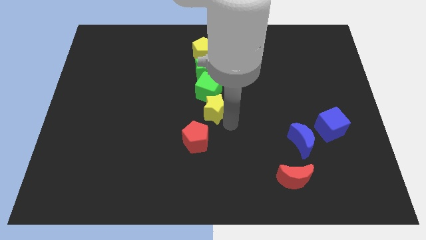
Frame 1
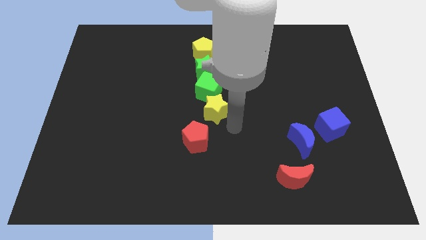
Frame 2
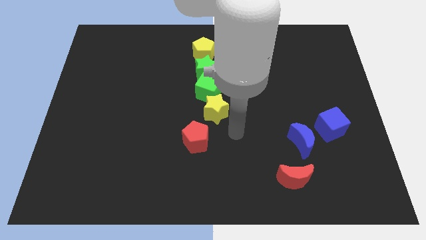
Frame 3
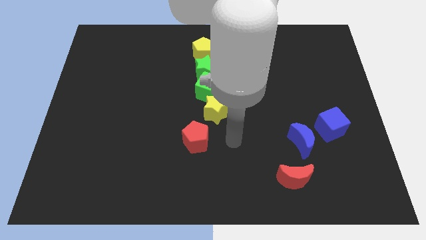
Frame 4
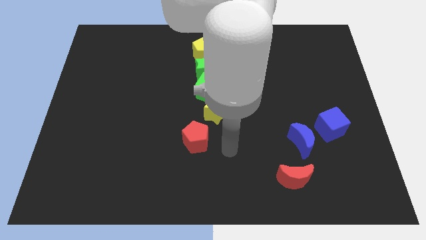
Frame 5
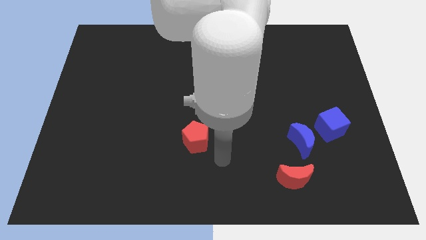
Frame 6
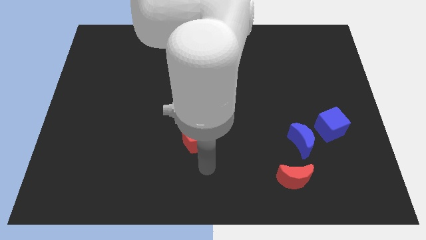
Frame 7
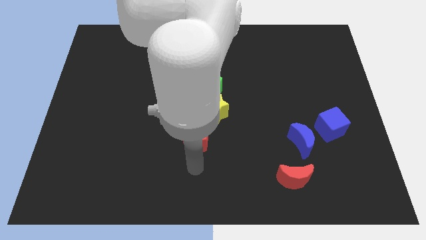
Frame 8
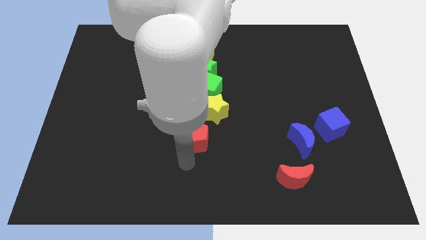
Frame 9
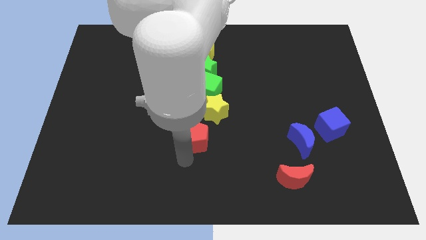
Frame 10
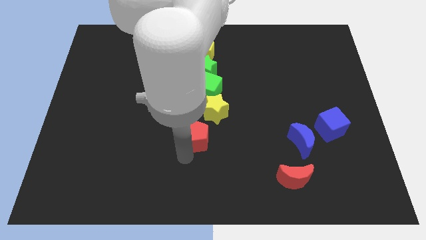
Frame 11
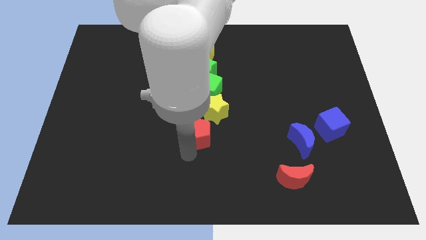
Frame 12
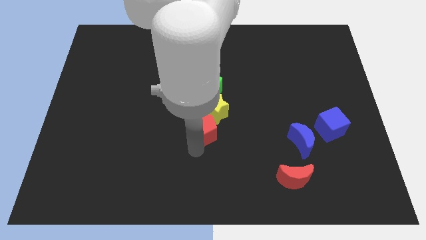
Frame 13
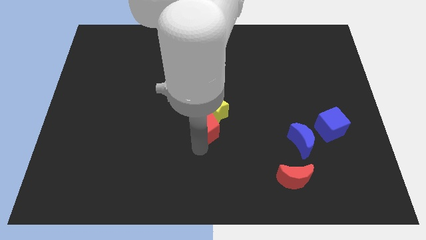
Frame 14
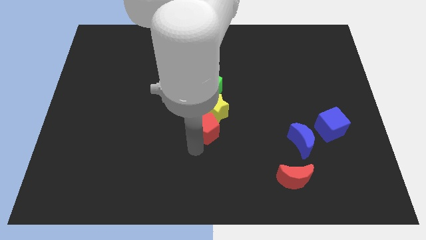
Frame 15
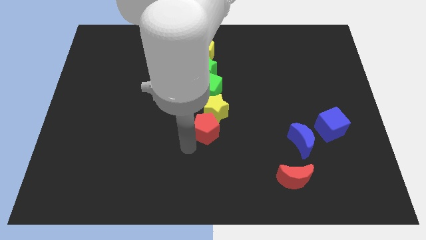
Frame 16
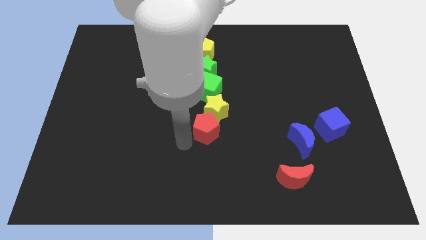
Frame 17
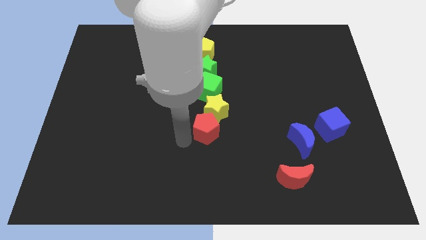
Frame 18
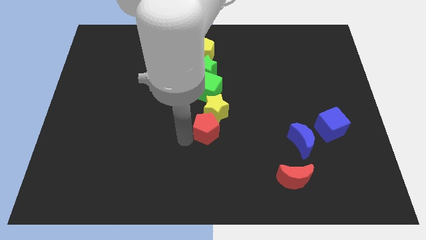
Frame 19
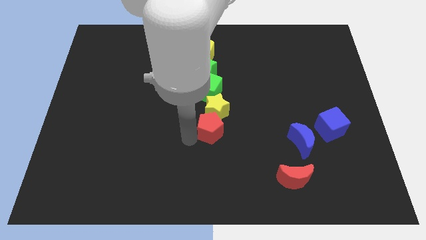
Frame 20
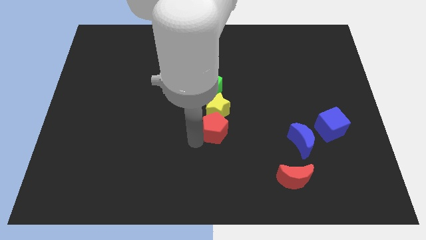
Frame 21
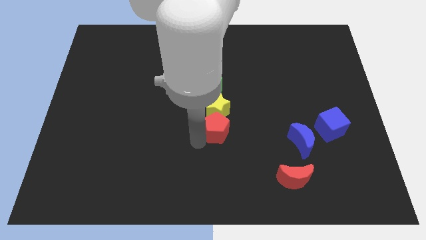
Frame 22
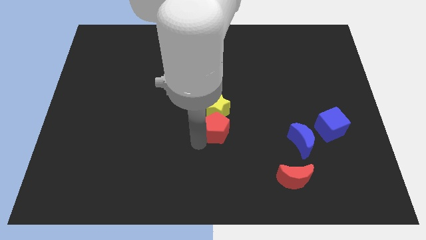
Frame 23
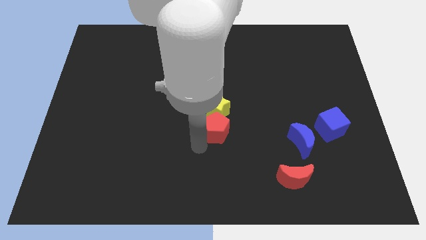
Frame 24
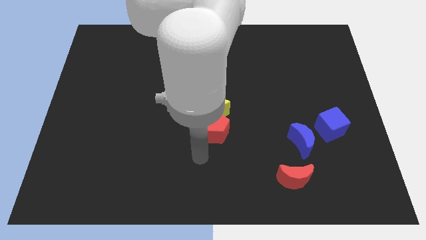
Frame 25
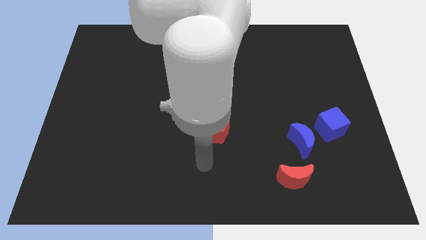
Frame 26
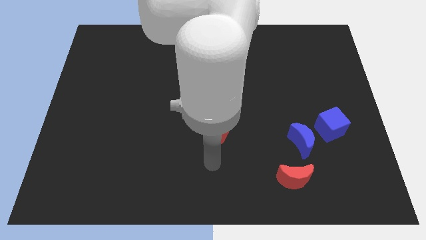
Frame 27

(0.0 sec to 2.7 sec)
push the red pentagon below yellow star

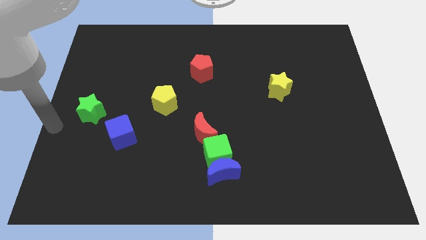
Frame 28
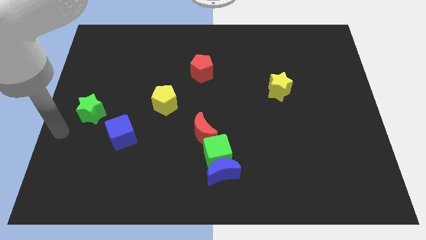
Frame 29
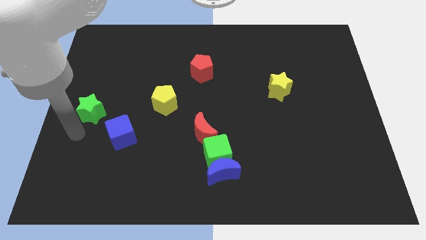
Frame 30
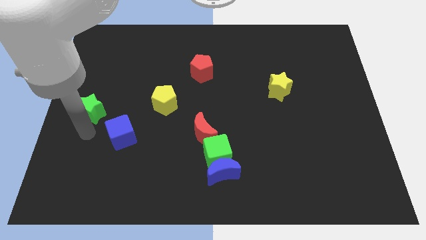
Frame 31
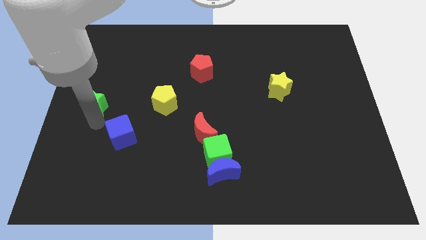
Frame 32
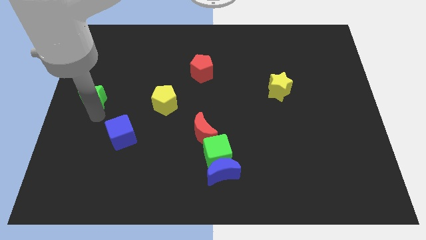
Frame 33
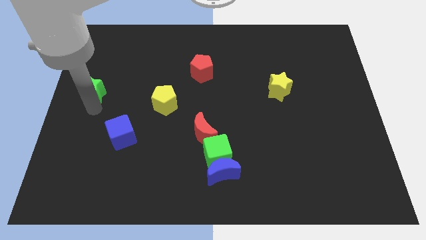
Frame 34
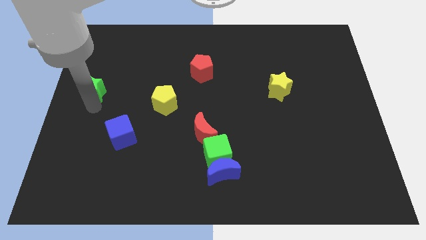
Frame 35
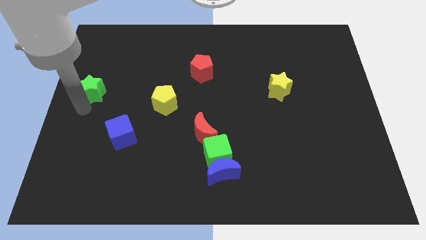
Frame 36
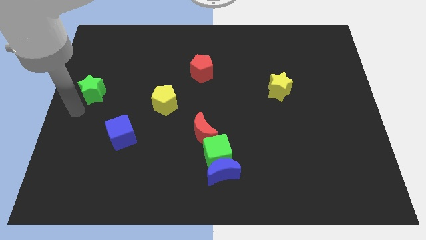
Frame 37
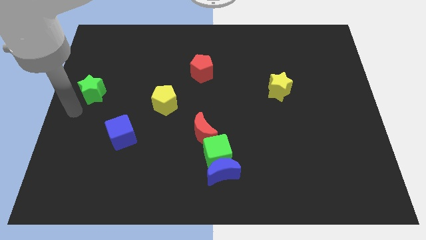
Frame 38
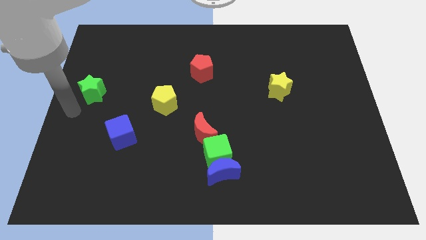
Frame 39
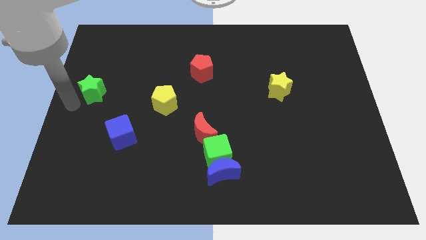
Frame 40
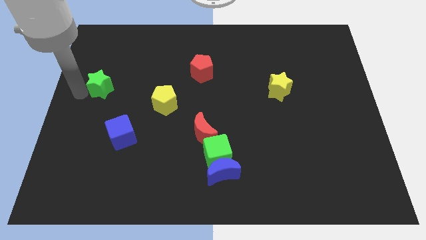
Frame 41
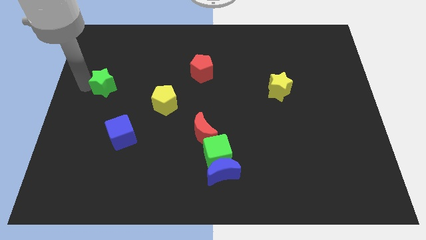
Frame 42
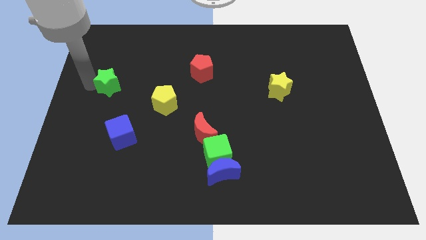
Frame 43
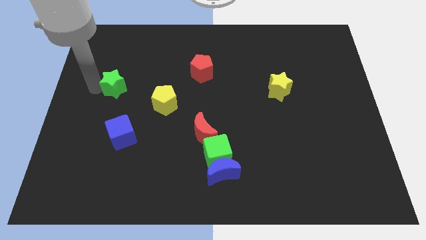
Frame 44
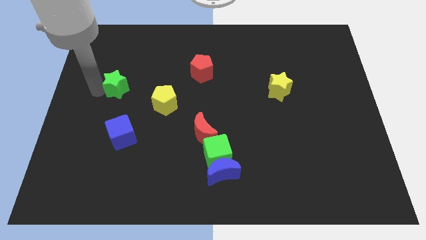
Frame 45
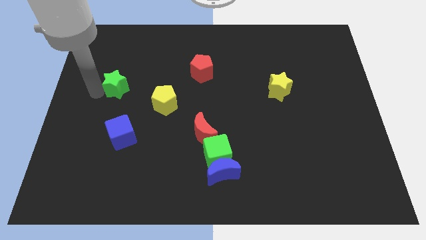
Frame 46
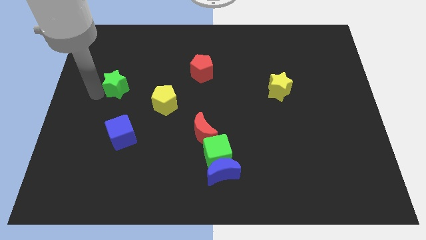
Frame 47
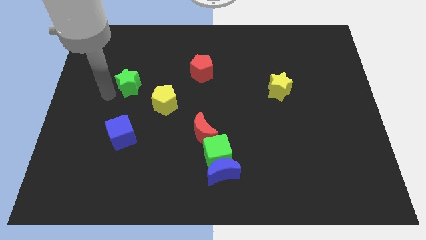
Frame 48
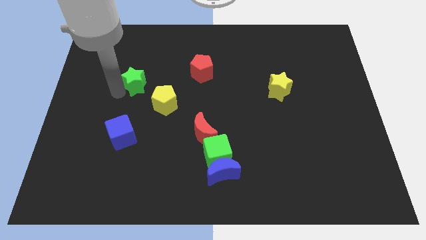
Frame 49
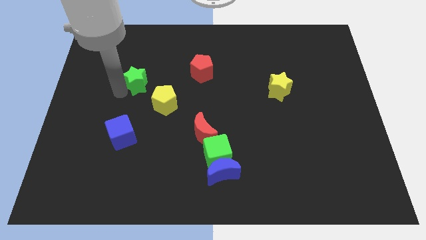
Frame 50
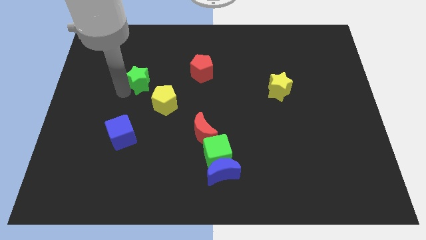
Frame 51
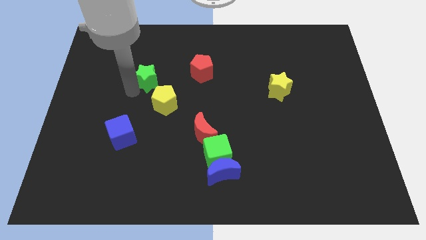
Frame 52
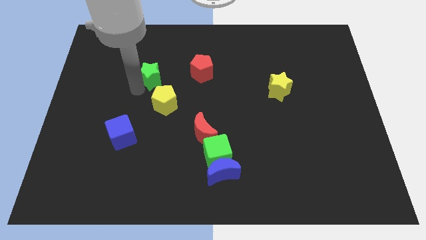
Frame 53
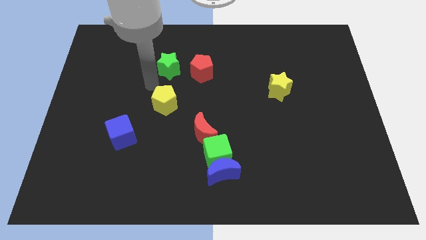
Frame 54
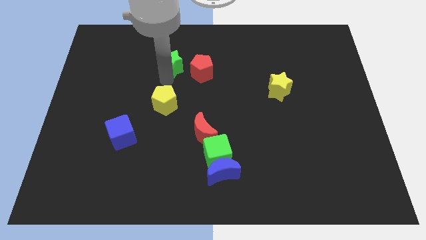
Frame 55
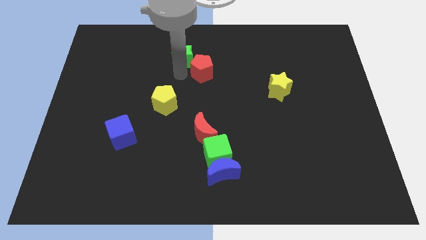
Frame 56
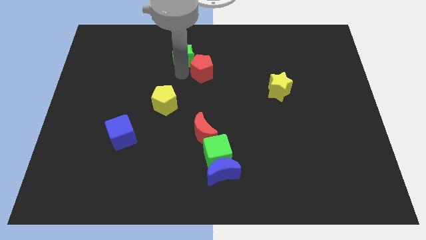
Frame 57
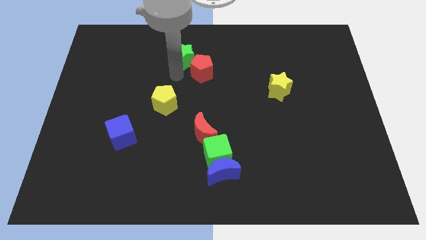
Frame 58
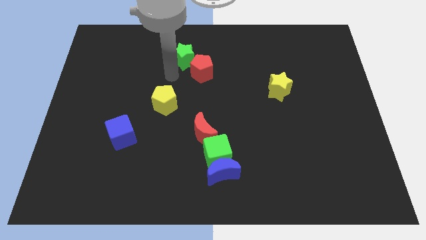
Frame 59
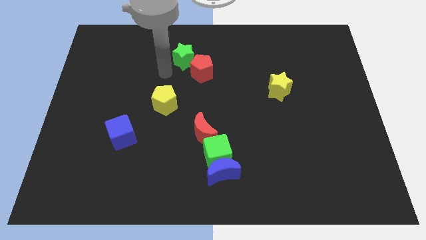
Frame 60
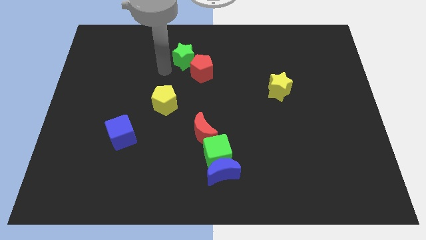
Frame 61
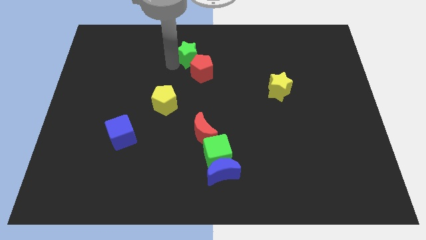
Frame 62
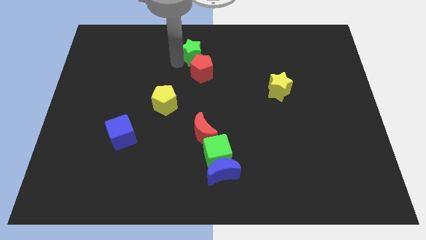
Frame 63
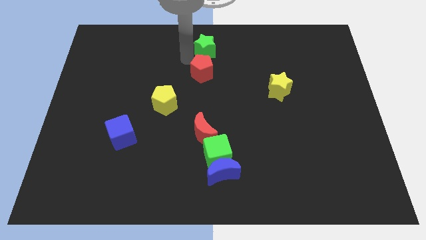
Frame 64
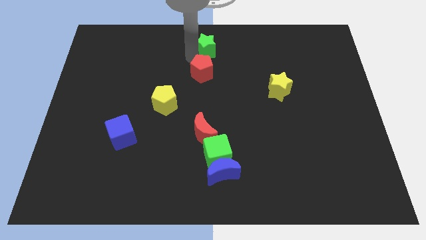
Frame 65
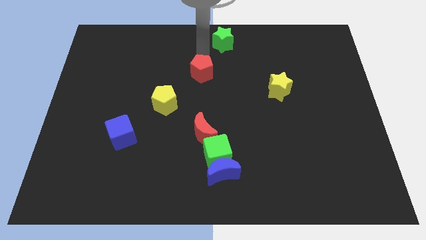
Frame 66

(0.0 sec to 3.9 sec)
put the green star above the red pentagon

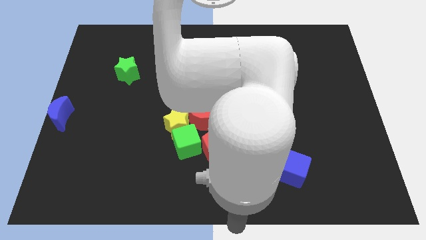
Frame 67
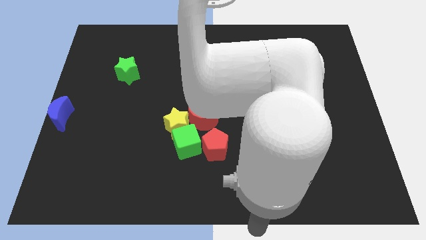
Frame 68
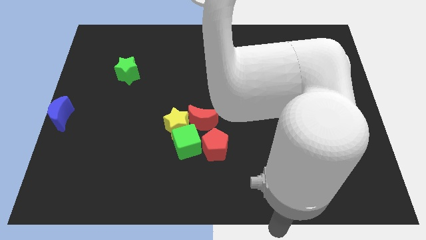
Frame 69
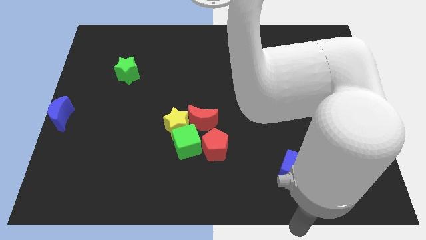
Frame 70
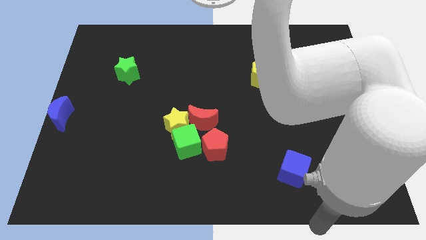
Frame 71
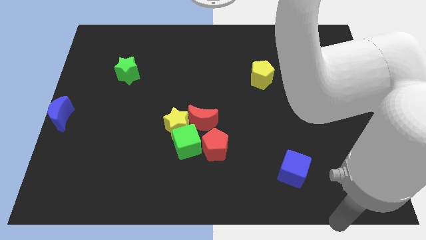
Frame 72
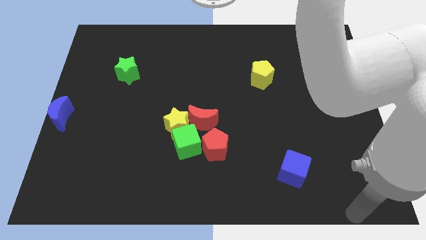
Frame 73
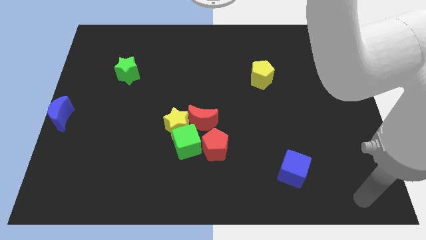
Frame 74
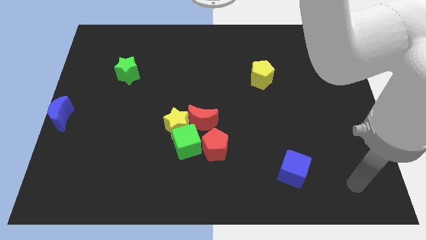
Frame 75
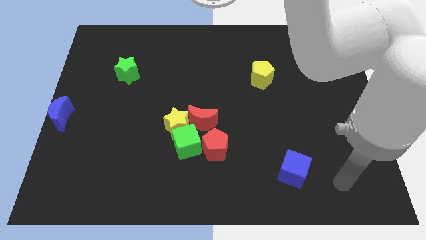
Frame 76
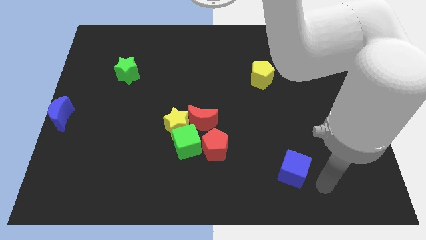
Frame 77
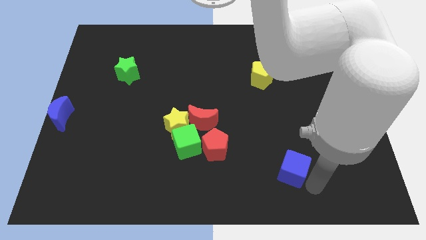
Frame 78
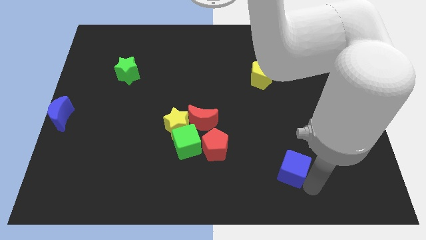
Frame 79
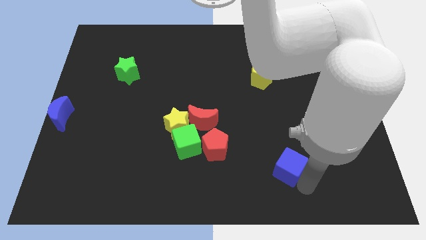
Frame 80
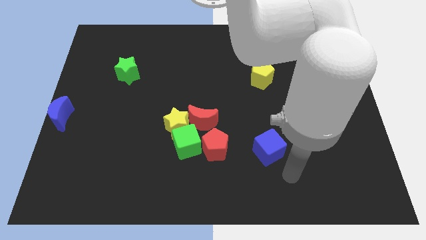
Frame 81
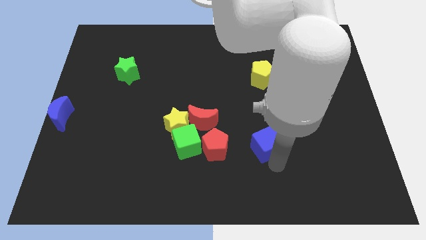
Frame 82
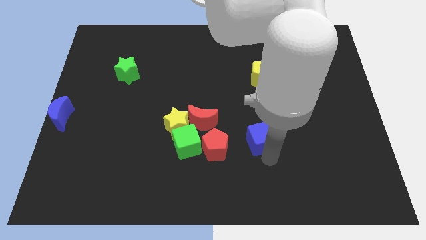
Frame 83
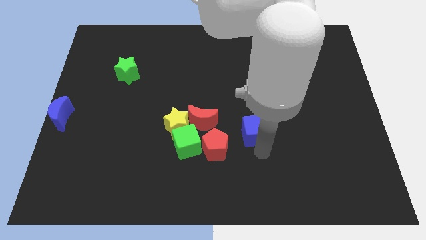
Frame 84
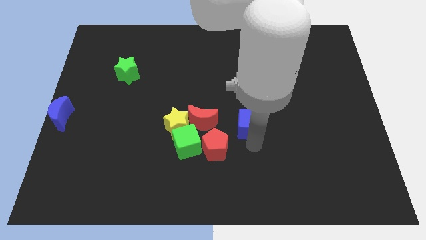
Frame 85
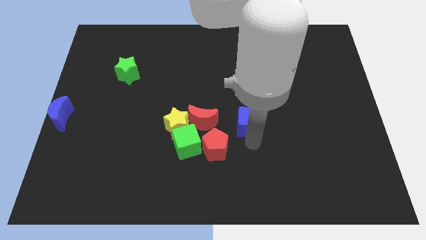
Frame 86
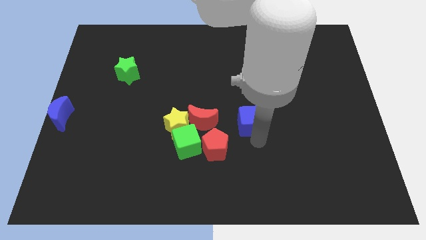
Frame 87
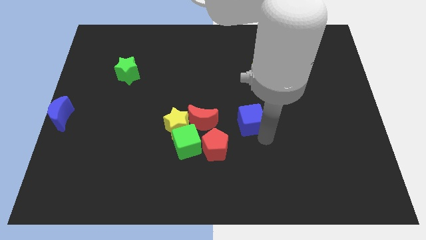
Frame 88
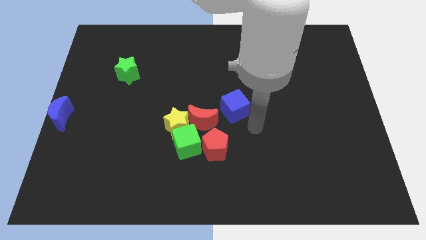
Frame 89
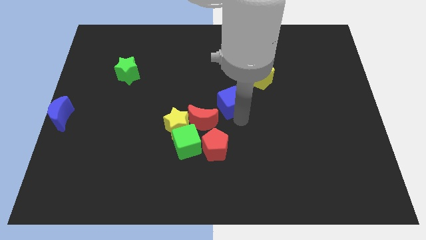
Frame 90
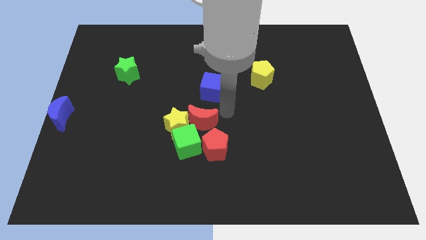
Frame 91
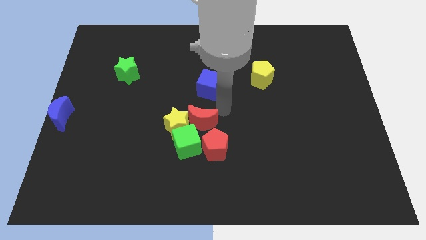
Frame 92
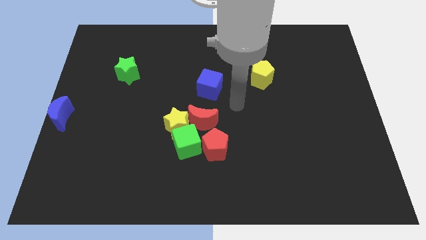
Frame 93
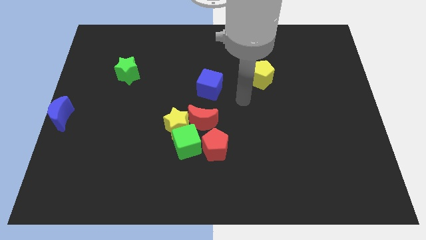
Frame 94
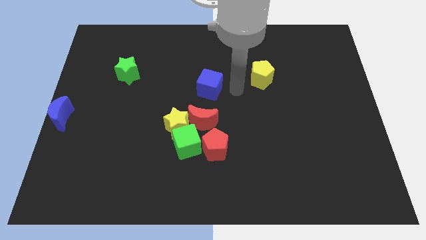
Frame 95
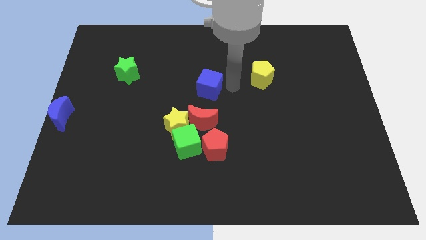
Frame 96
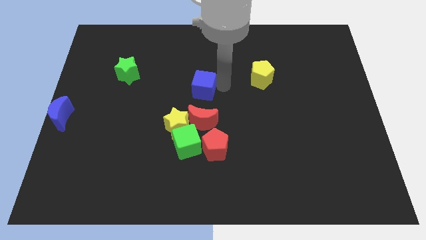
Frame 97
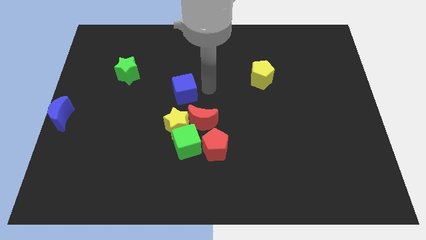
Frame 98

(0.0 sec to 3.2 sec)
slide blue cube on top of red moon
